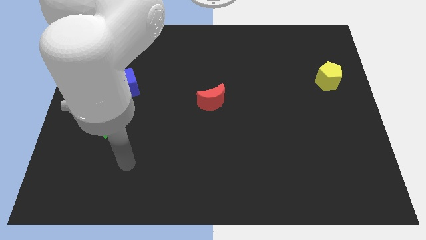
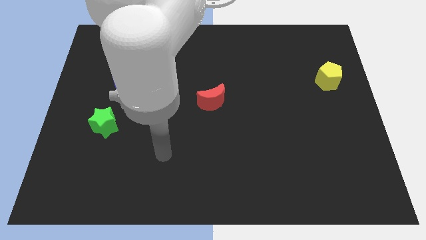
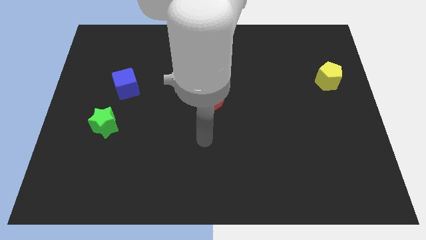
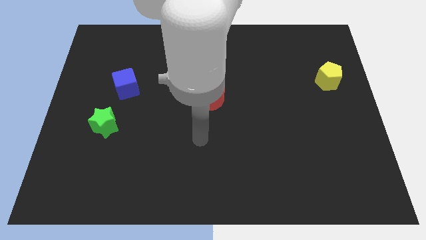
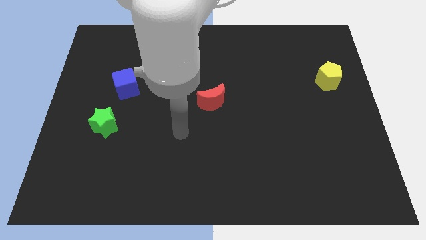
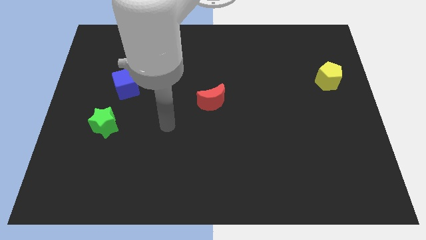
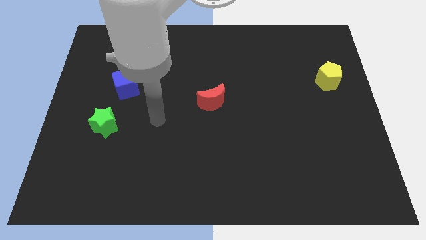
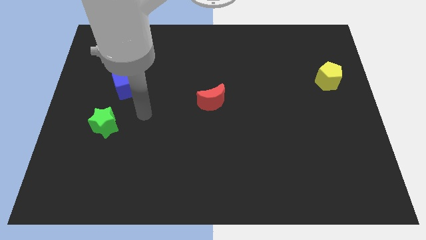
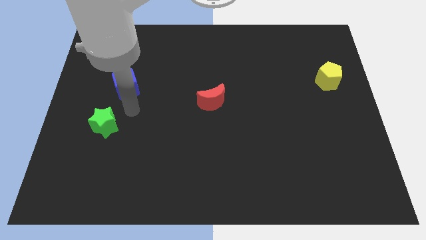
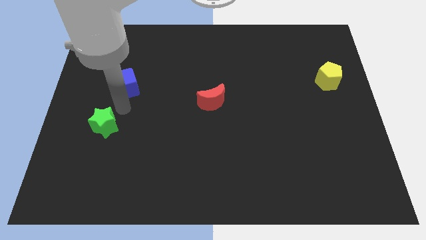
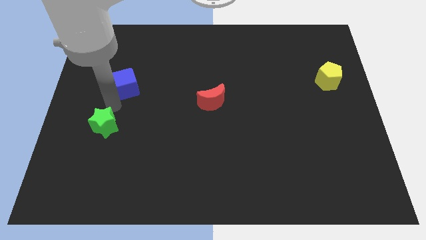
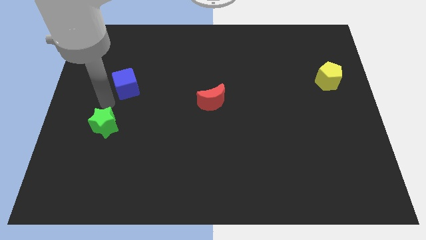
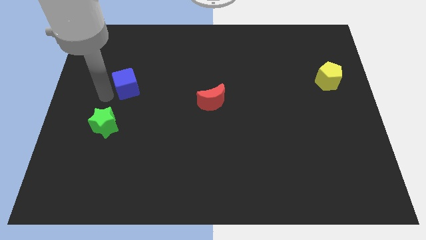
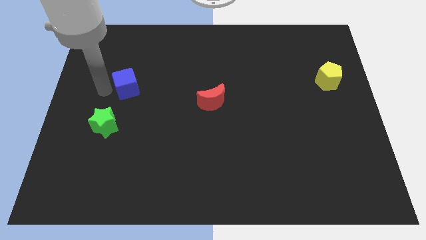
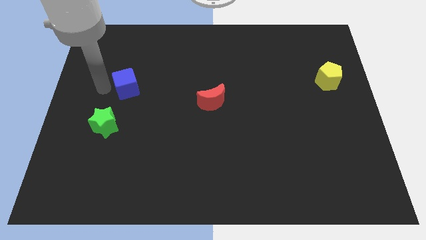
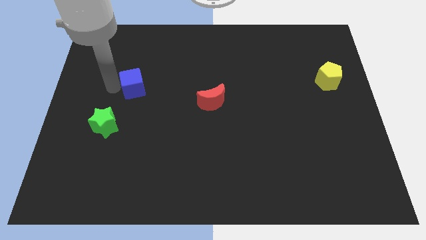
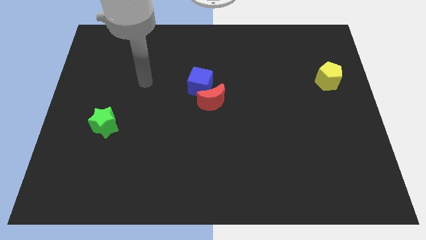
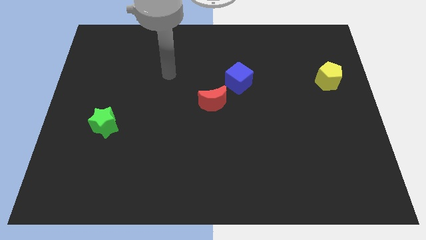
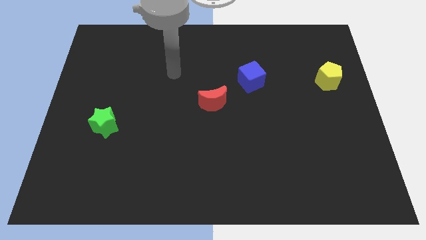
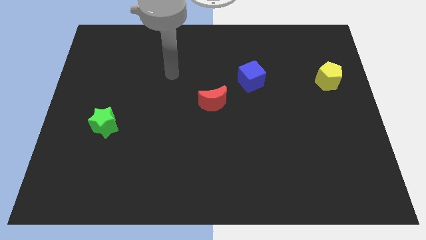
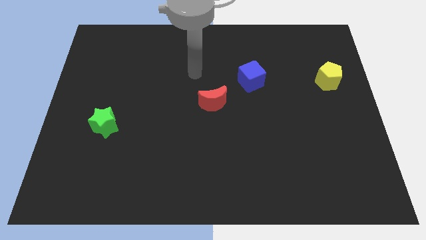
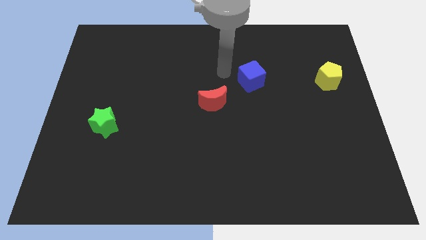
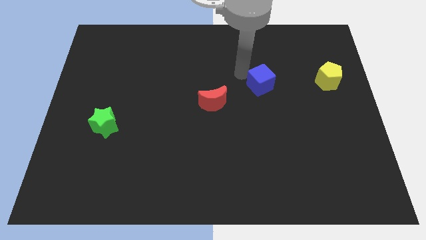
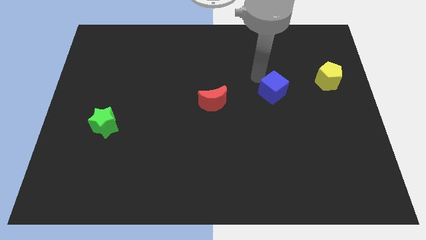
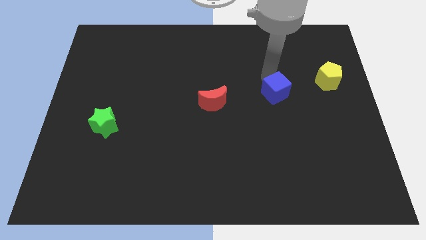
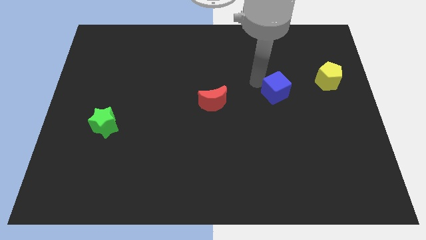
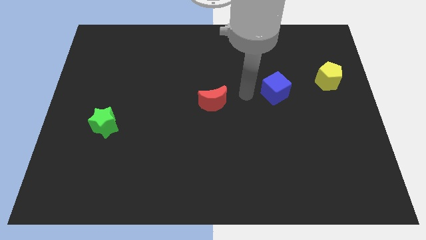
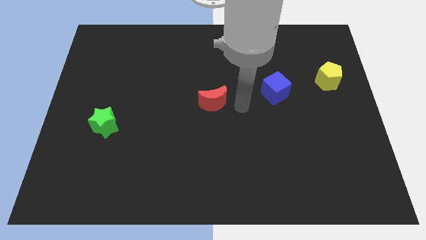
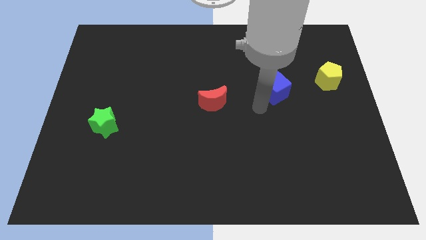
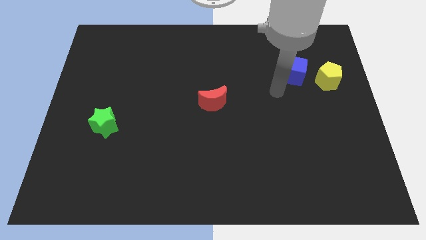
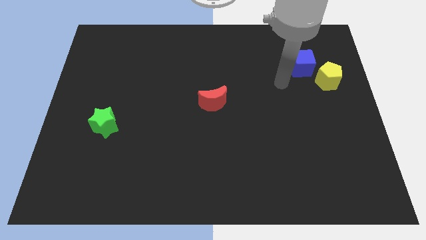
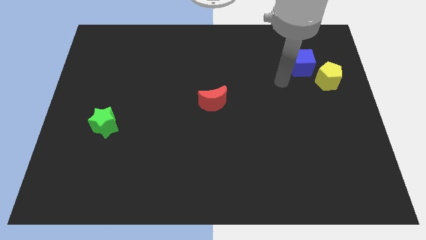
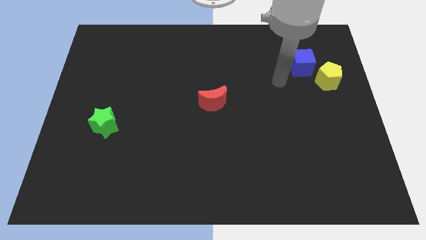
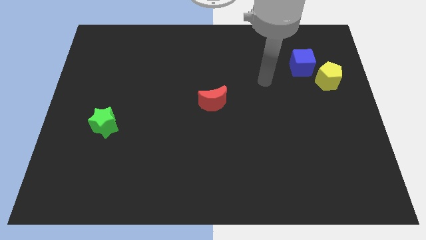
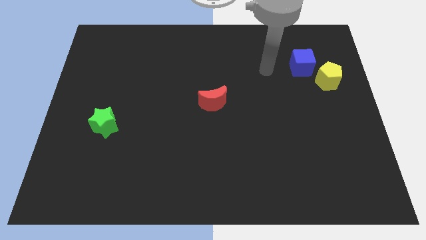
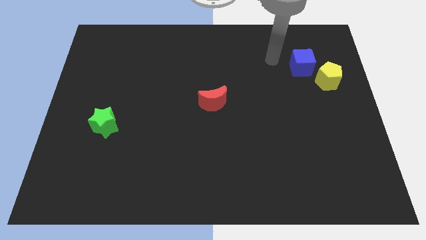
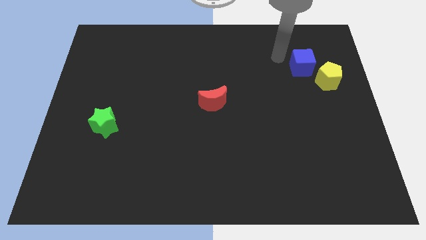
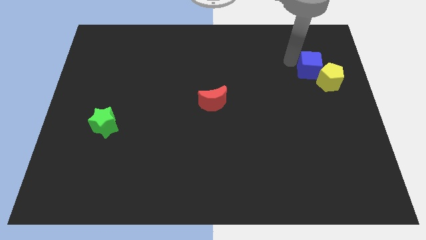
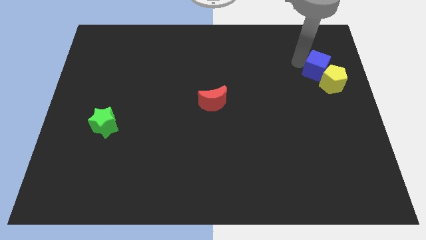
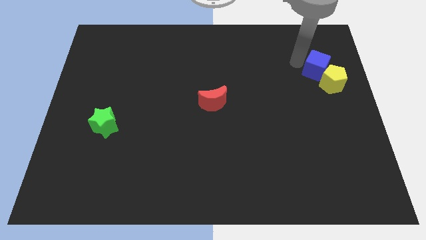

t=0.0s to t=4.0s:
put the blue block next to the pentagon

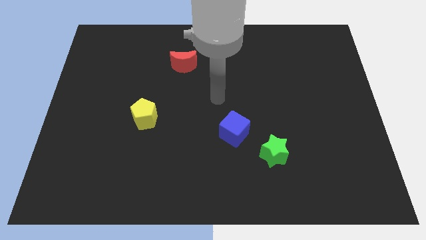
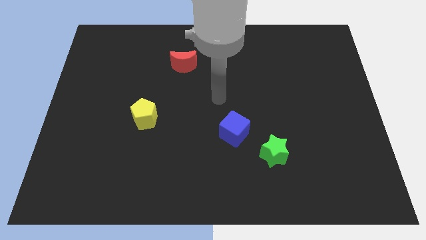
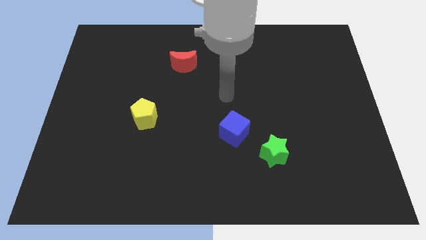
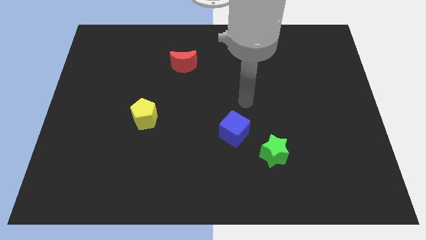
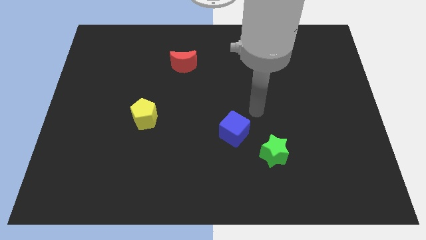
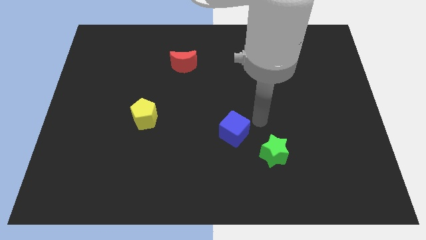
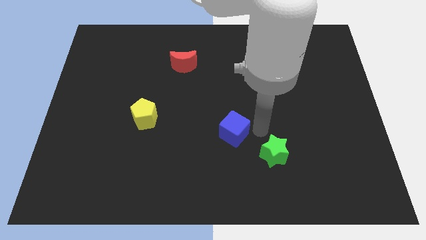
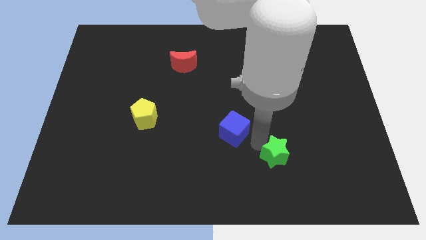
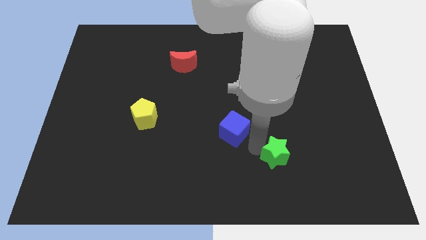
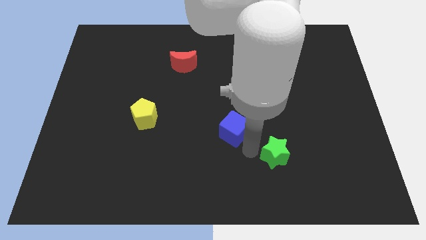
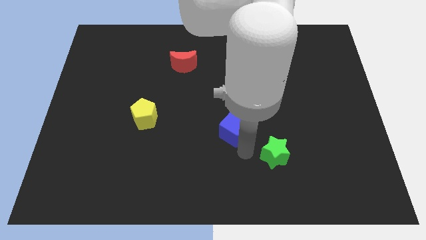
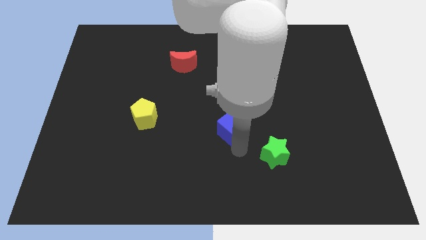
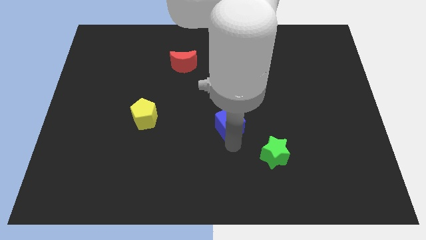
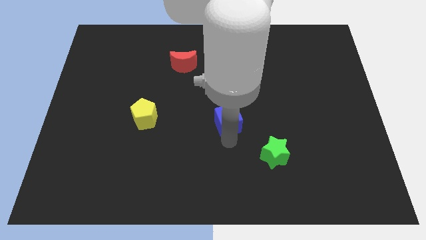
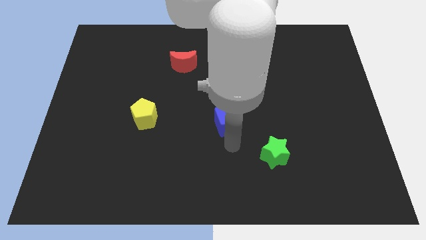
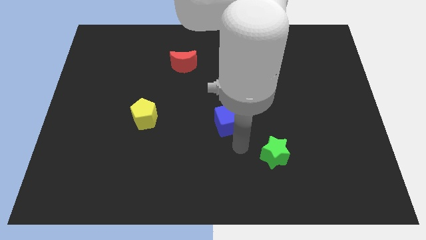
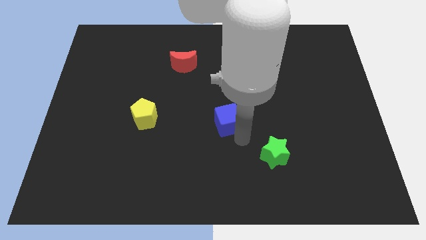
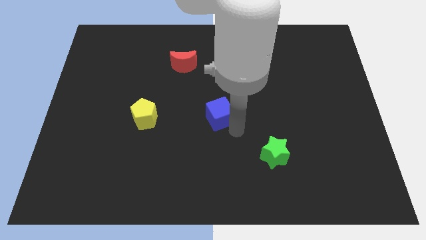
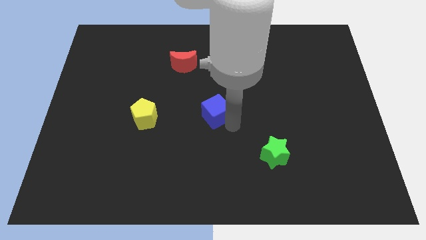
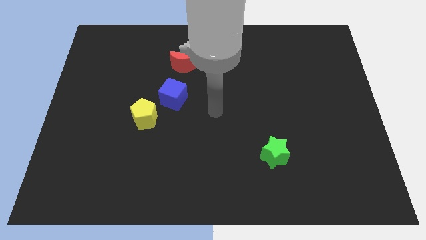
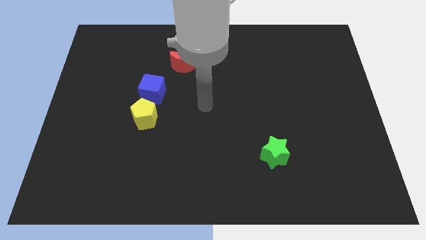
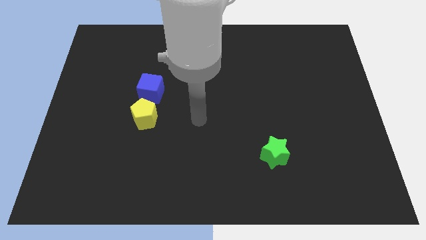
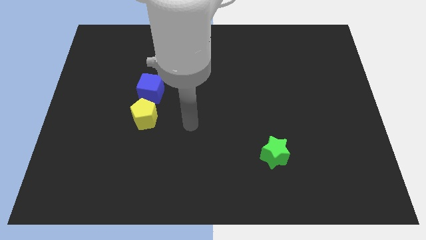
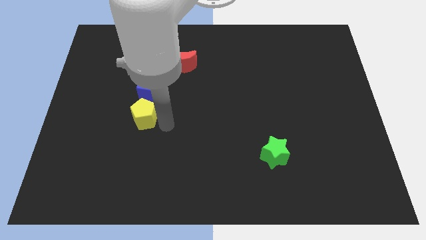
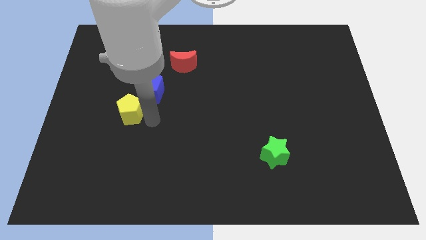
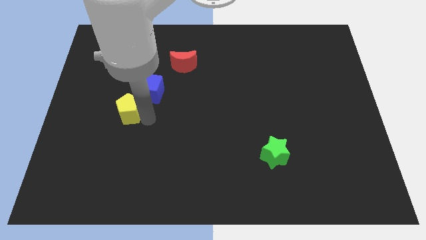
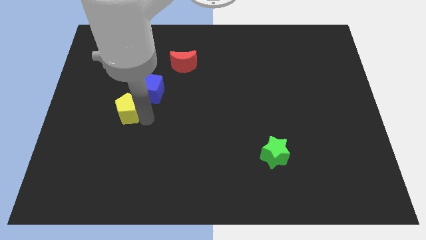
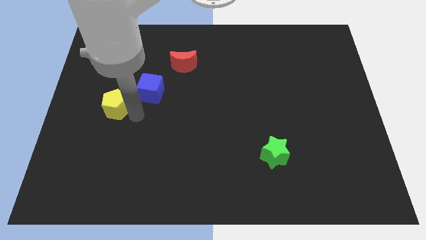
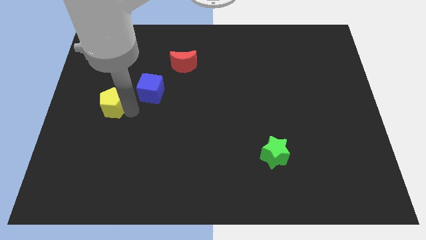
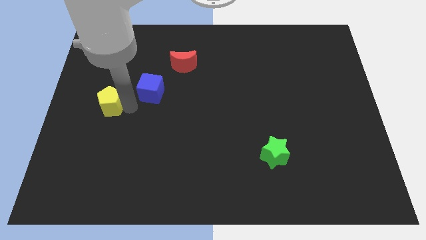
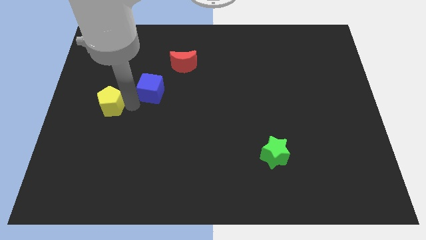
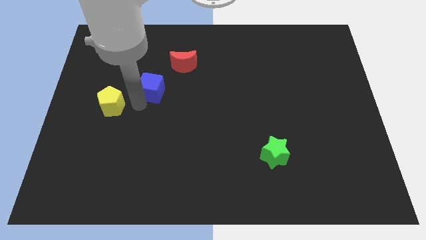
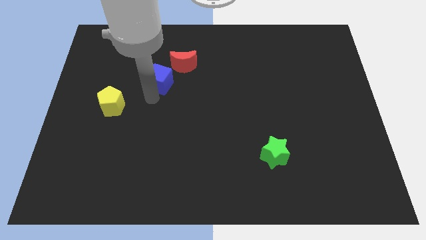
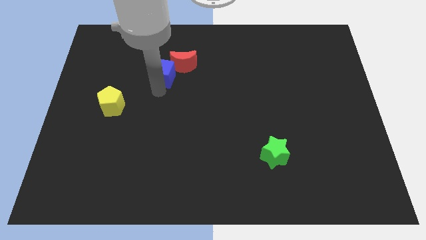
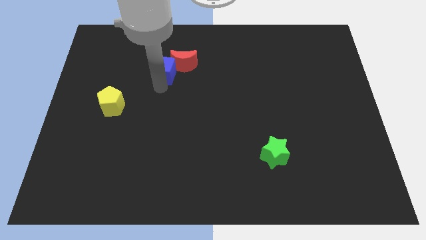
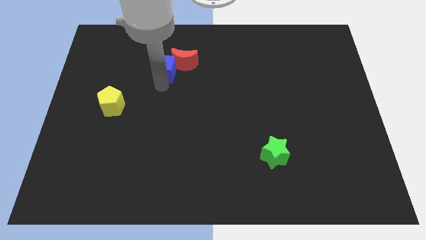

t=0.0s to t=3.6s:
push the cube close to the moon

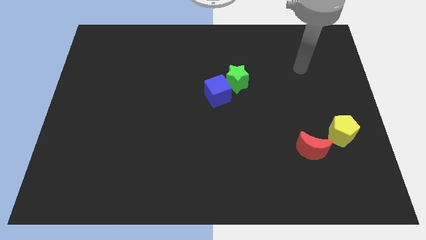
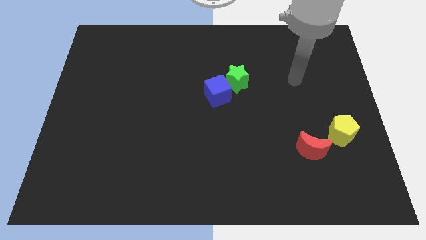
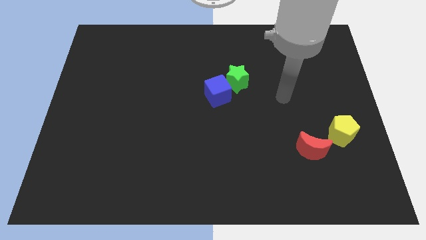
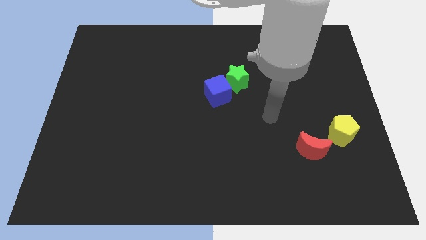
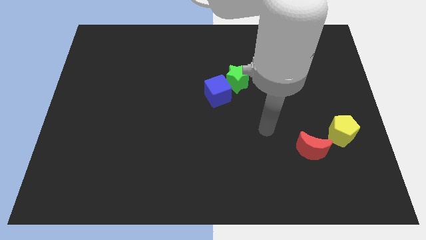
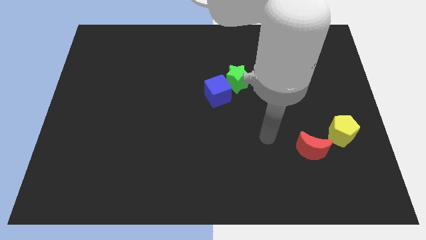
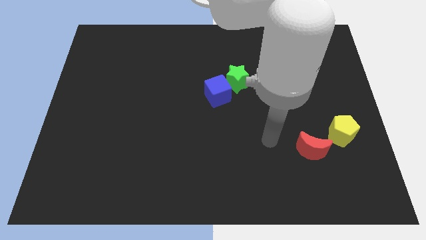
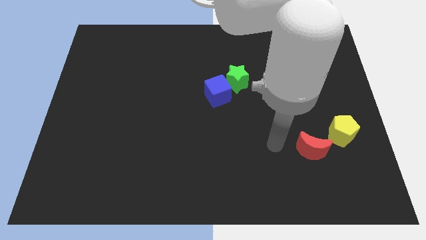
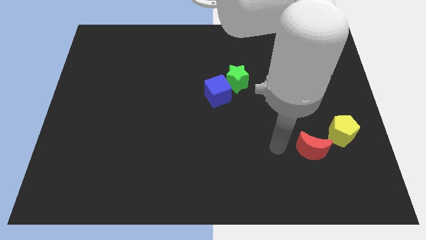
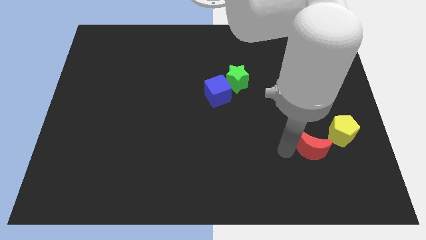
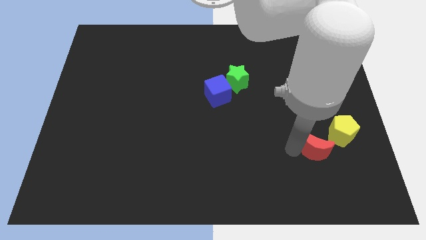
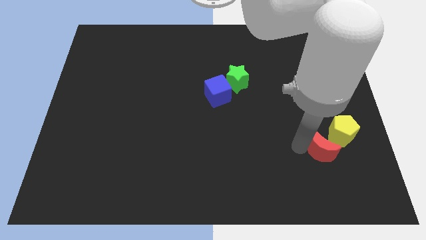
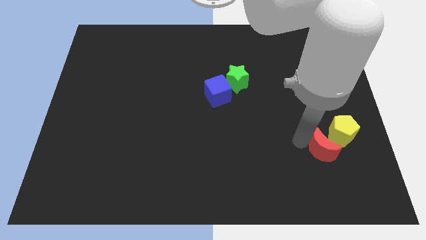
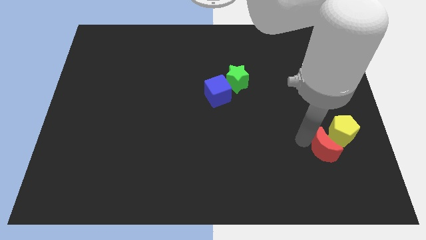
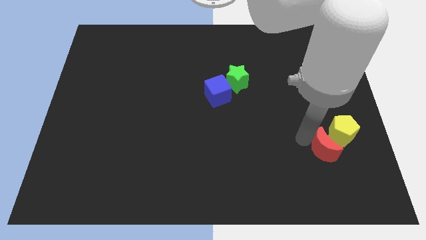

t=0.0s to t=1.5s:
push the red block to the yellow pentagon
